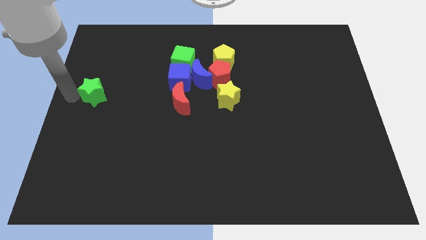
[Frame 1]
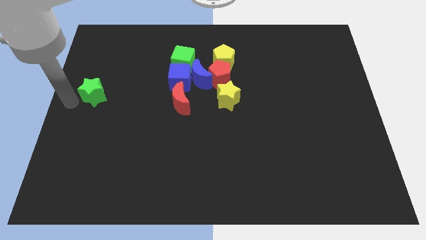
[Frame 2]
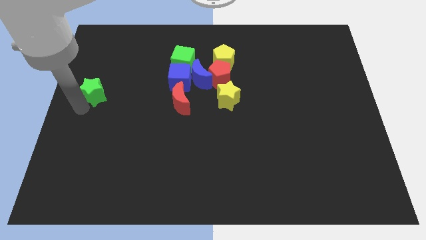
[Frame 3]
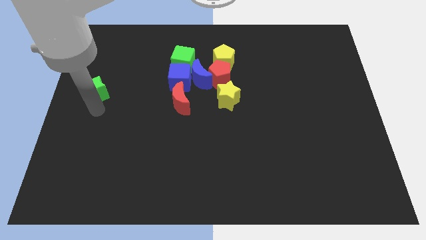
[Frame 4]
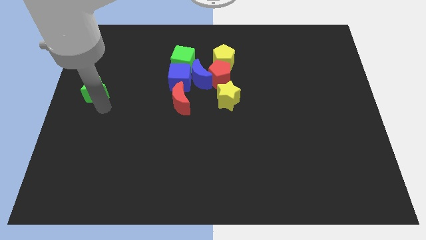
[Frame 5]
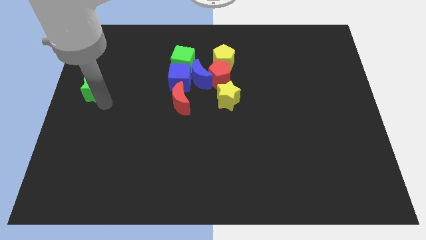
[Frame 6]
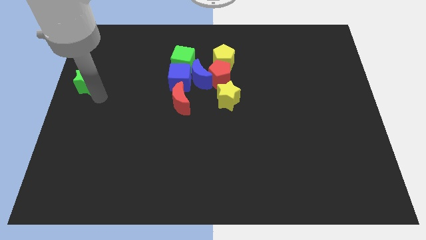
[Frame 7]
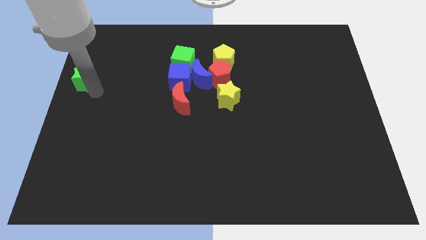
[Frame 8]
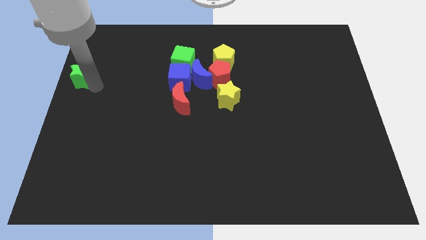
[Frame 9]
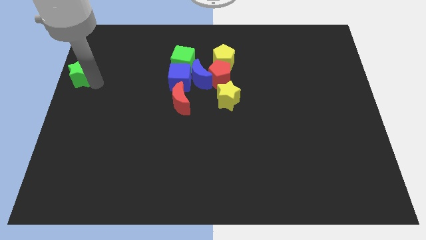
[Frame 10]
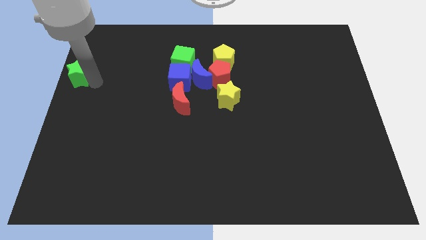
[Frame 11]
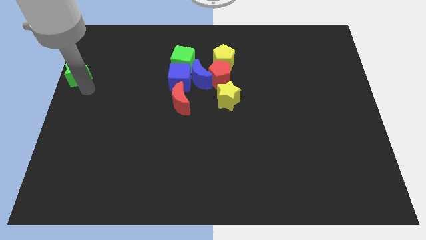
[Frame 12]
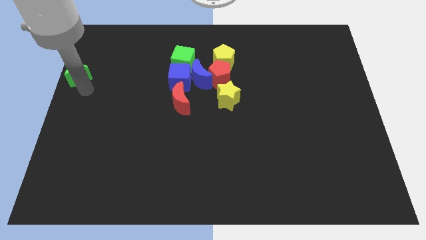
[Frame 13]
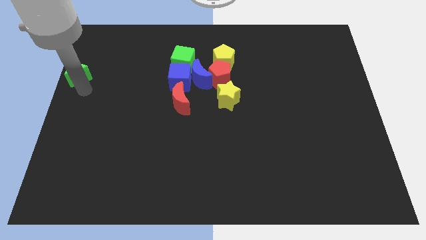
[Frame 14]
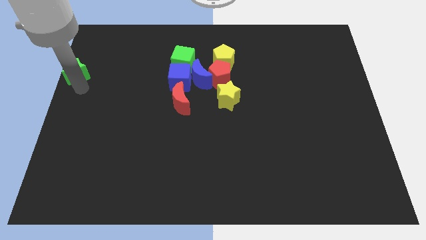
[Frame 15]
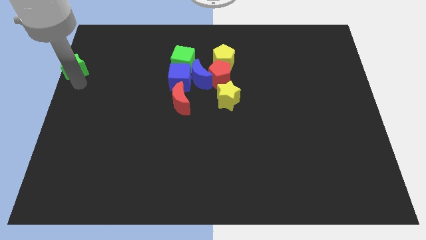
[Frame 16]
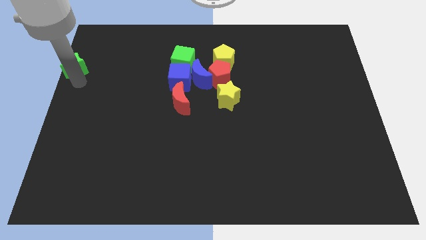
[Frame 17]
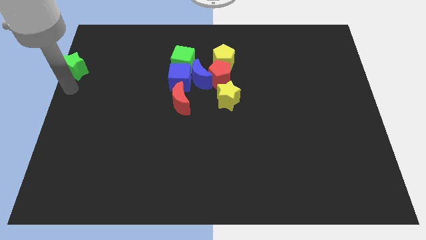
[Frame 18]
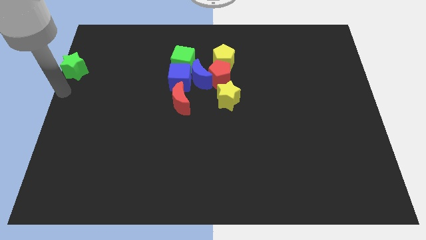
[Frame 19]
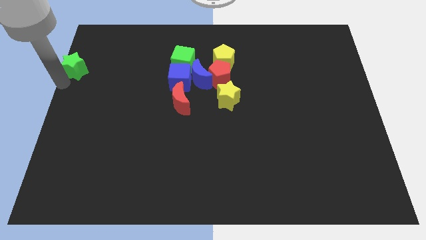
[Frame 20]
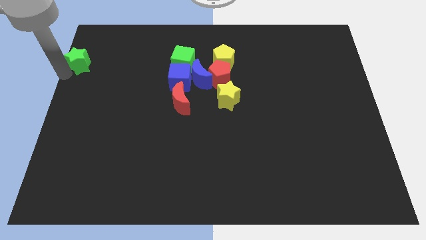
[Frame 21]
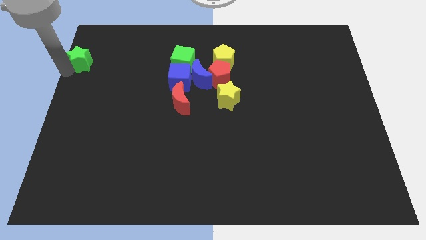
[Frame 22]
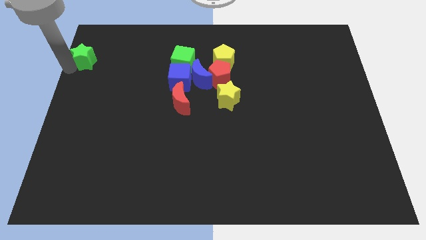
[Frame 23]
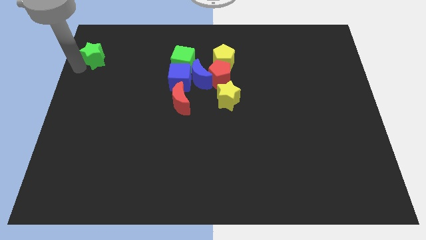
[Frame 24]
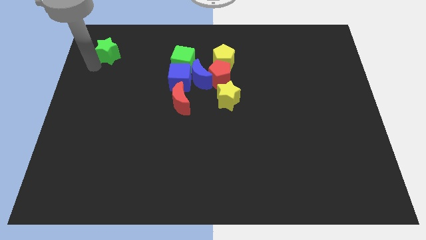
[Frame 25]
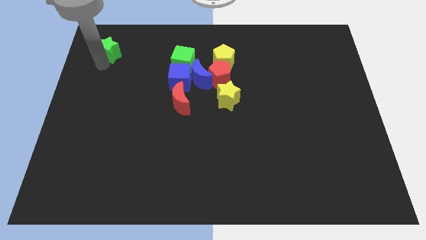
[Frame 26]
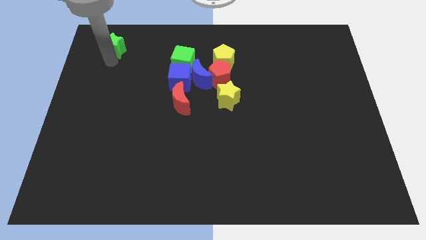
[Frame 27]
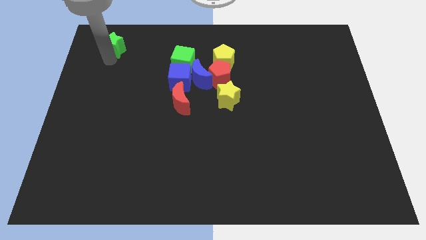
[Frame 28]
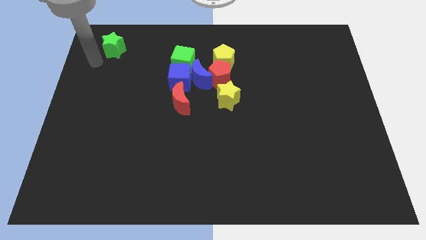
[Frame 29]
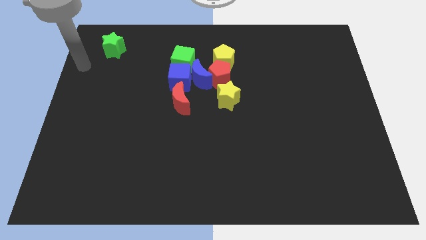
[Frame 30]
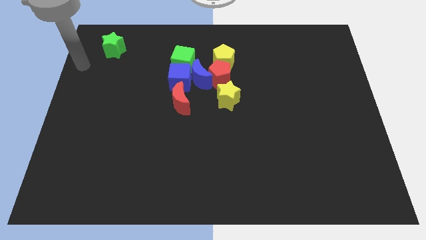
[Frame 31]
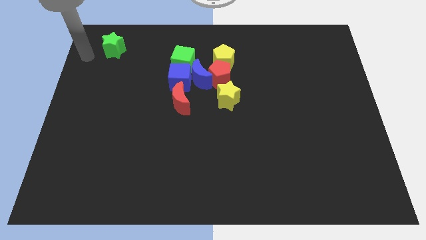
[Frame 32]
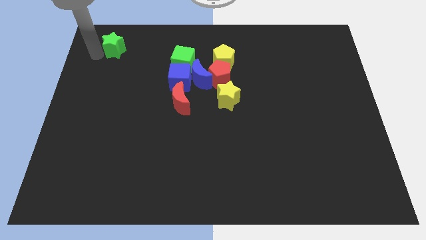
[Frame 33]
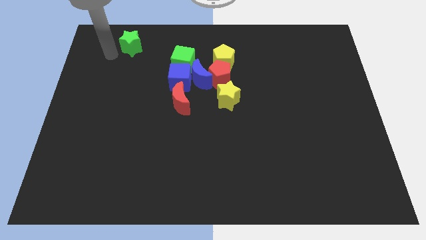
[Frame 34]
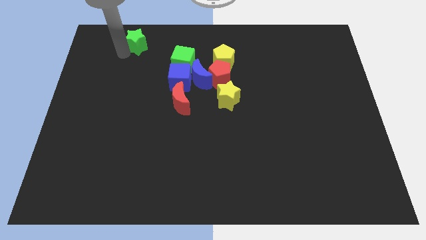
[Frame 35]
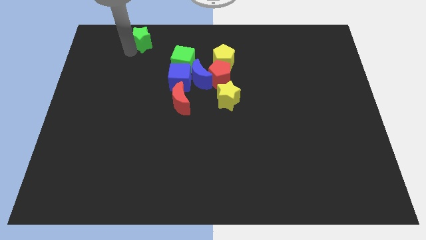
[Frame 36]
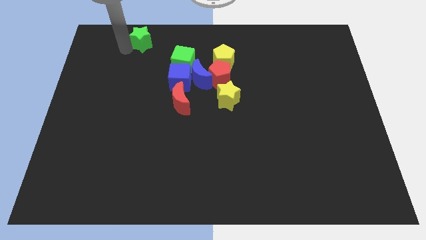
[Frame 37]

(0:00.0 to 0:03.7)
push the green star towards the top side

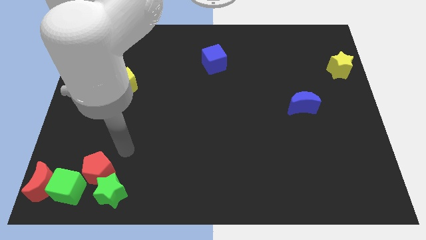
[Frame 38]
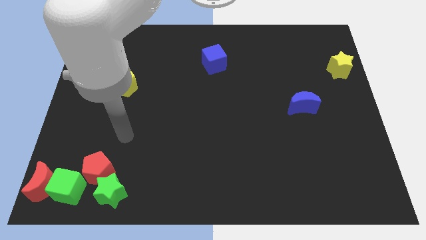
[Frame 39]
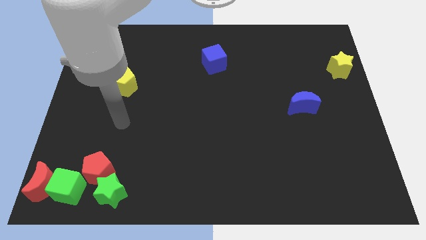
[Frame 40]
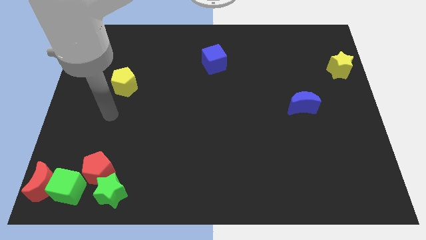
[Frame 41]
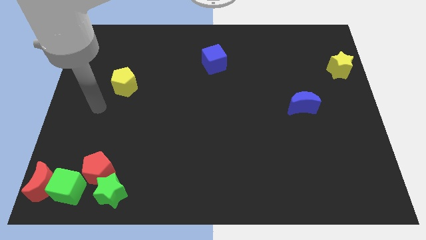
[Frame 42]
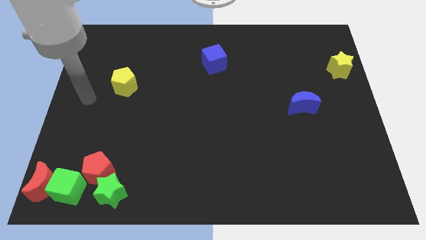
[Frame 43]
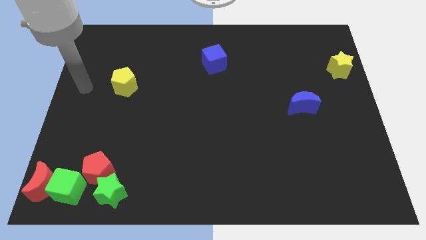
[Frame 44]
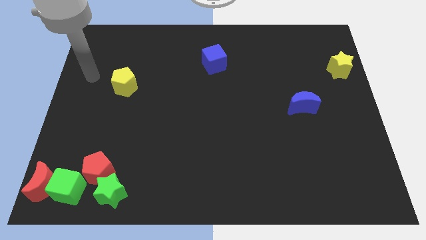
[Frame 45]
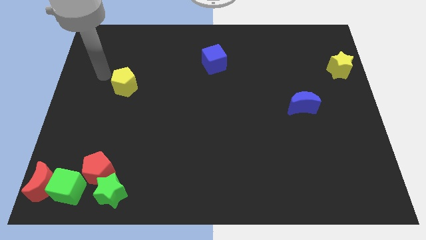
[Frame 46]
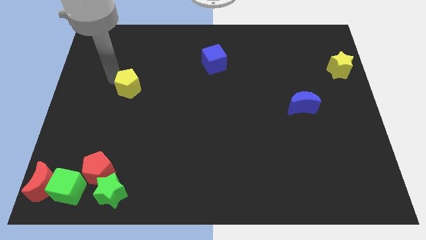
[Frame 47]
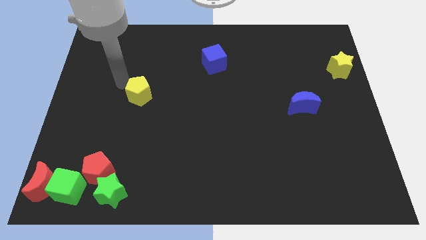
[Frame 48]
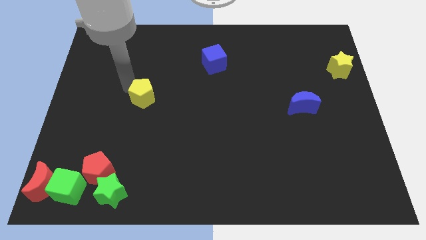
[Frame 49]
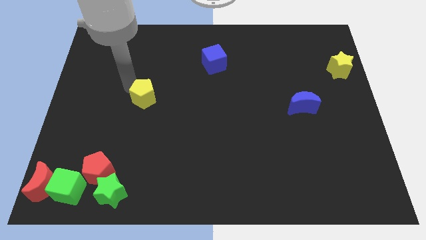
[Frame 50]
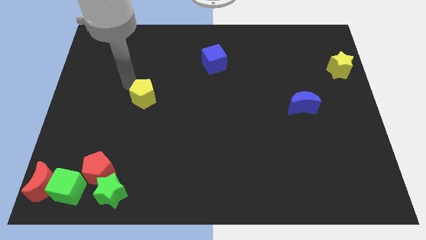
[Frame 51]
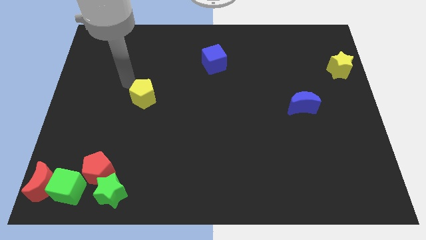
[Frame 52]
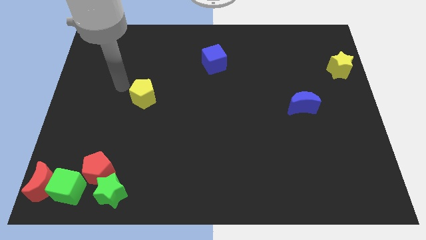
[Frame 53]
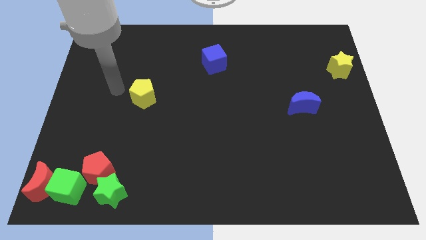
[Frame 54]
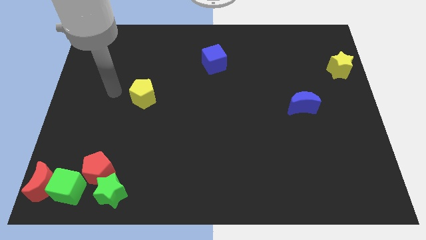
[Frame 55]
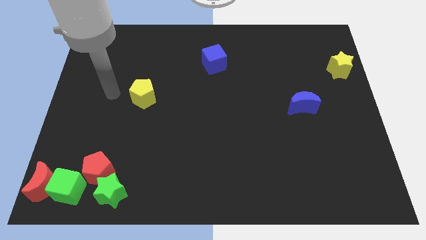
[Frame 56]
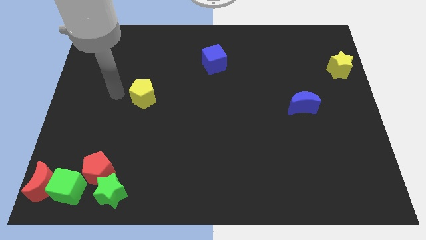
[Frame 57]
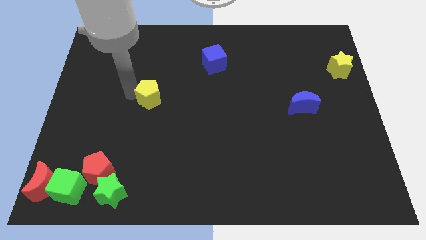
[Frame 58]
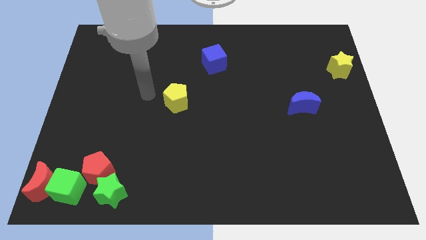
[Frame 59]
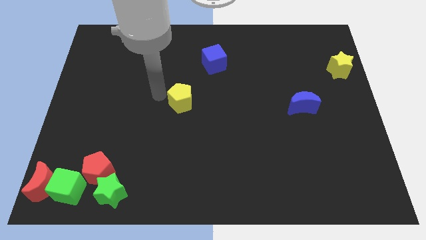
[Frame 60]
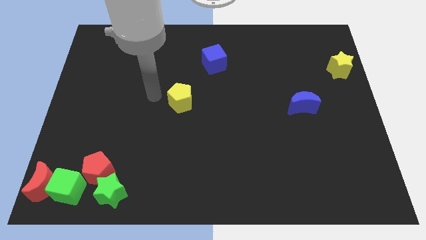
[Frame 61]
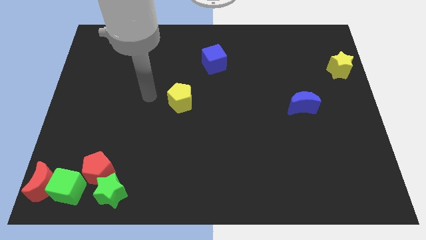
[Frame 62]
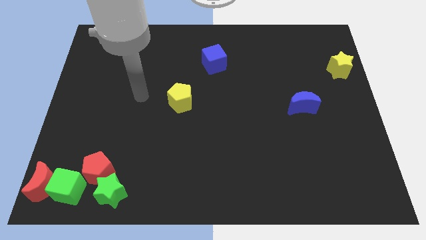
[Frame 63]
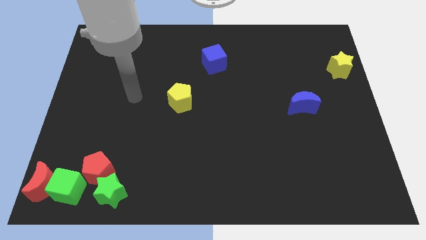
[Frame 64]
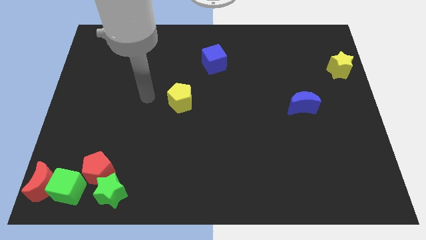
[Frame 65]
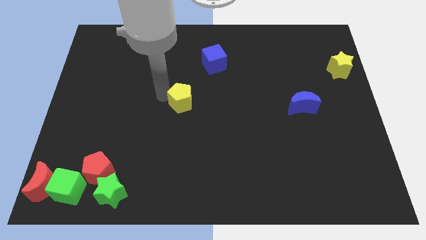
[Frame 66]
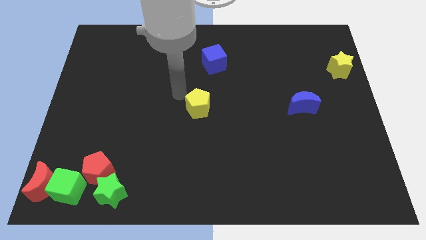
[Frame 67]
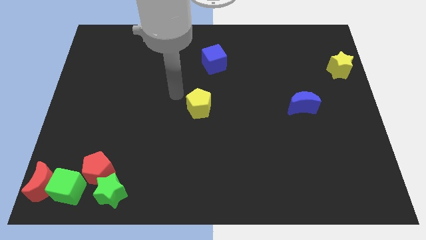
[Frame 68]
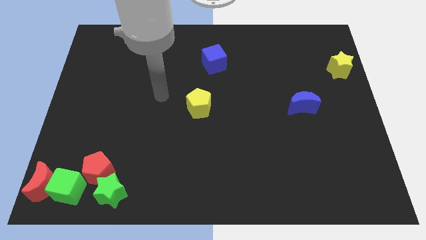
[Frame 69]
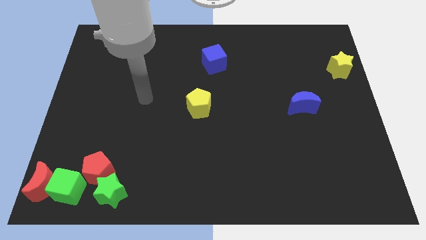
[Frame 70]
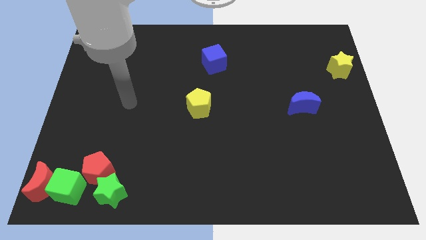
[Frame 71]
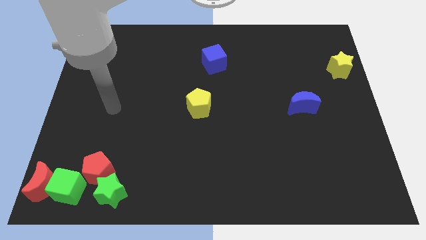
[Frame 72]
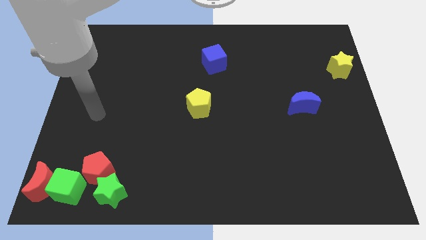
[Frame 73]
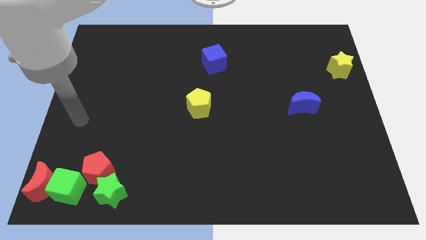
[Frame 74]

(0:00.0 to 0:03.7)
place the yellow pentagon at the center of the board

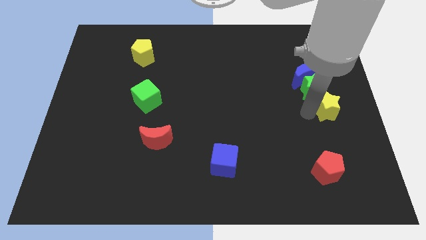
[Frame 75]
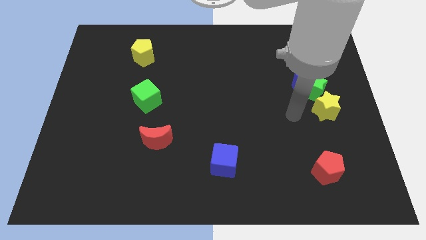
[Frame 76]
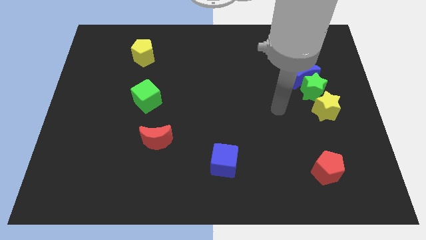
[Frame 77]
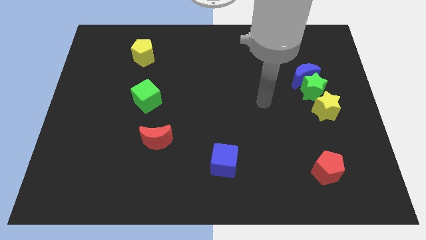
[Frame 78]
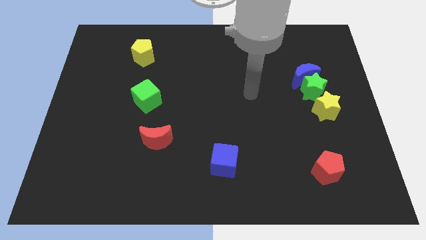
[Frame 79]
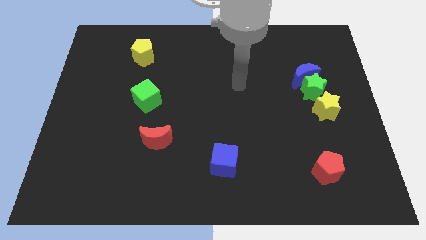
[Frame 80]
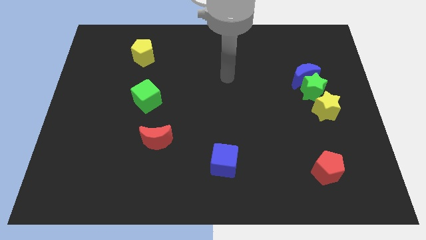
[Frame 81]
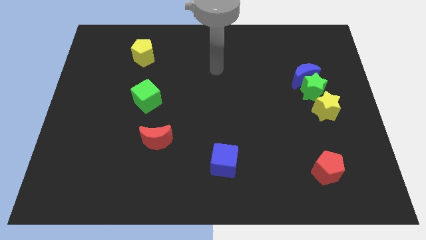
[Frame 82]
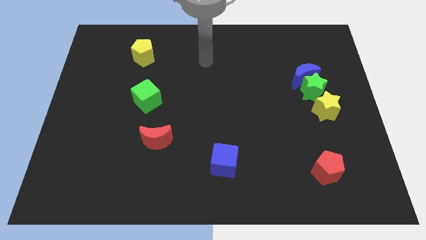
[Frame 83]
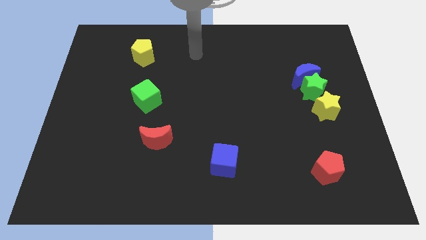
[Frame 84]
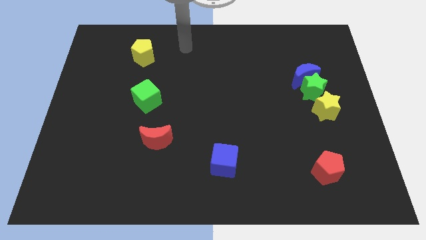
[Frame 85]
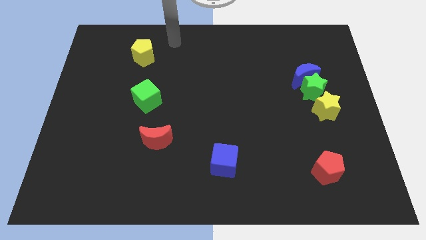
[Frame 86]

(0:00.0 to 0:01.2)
move the arm away from the yellow star

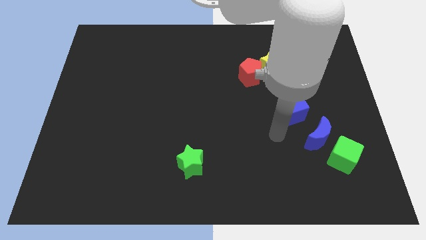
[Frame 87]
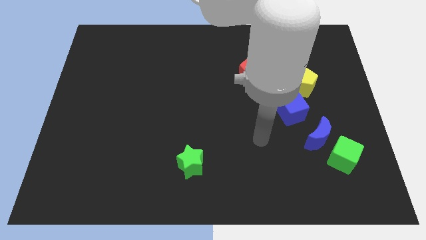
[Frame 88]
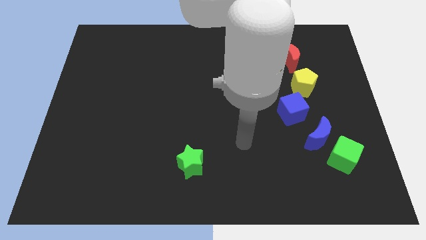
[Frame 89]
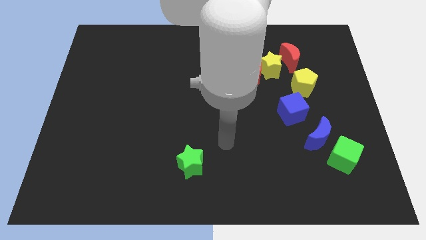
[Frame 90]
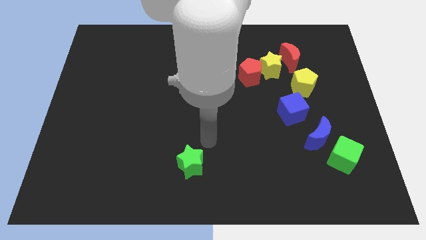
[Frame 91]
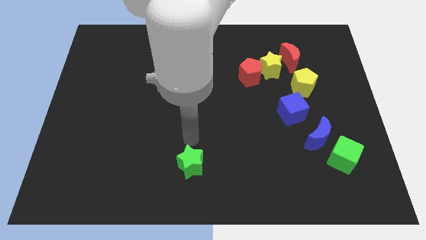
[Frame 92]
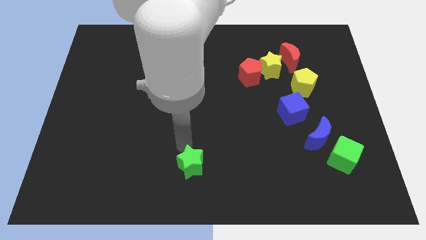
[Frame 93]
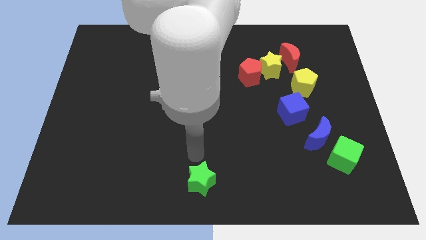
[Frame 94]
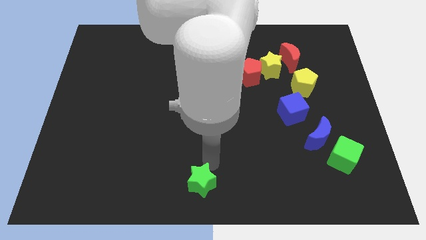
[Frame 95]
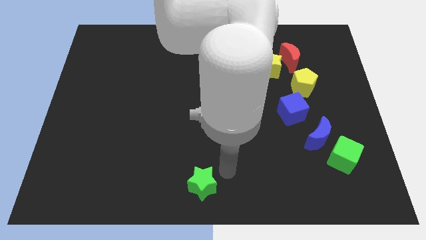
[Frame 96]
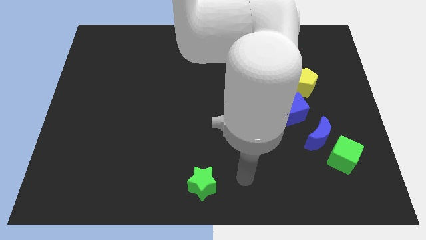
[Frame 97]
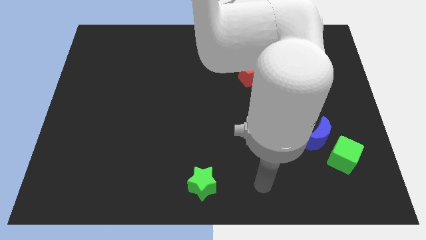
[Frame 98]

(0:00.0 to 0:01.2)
push the green star slightly downward
